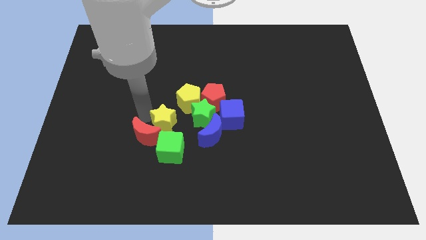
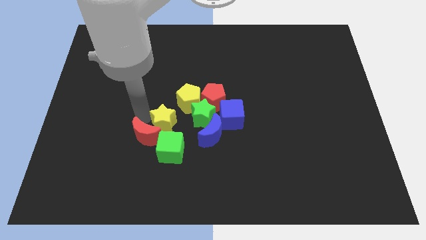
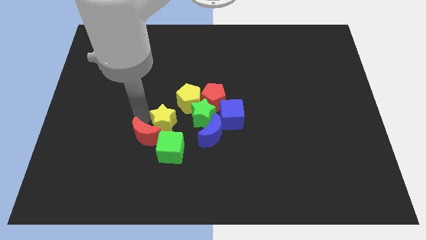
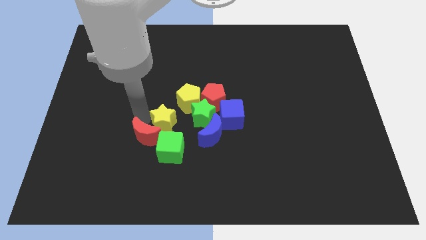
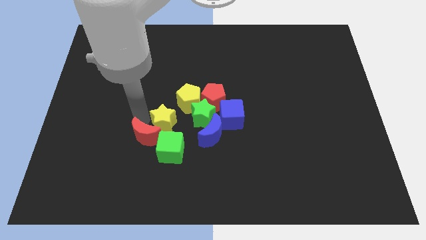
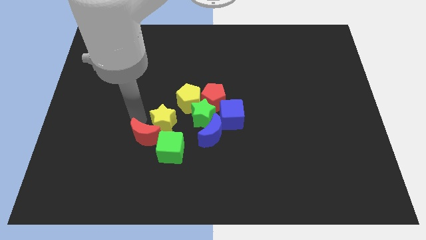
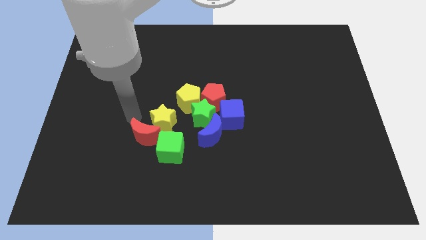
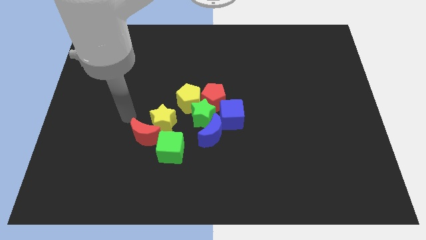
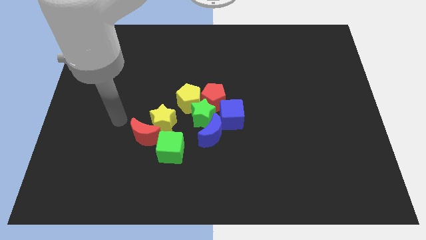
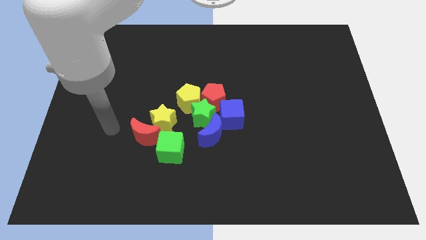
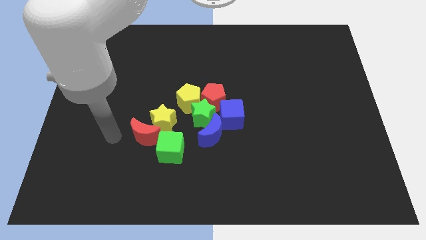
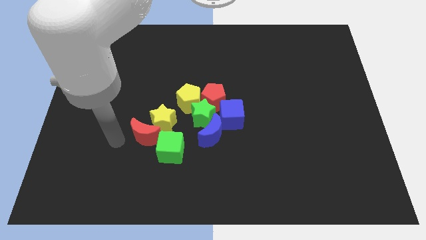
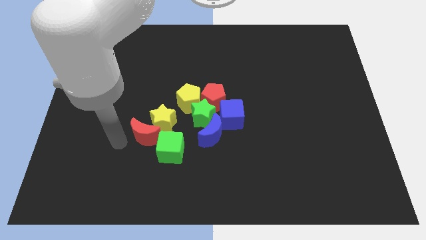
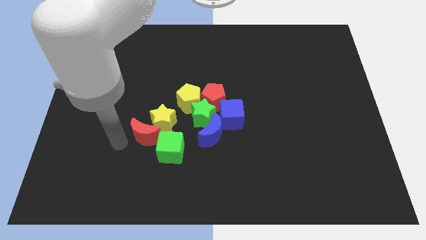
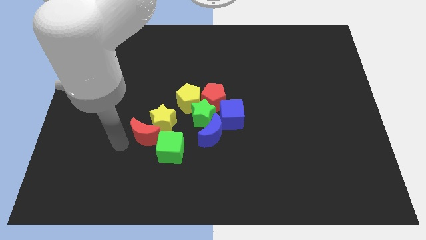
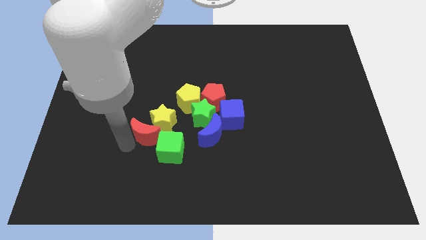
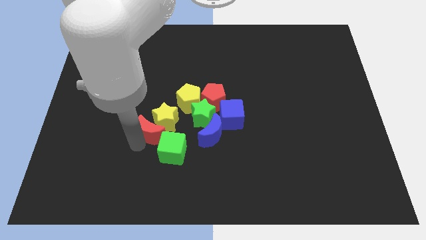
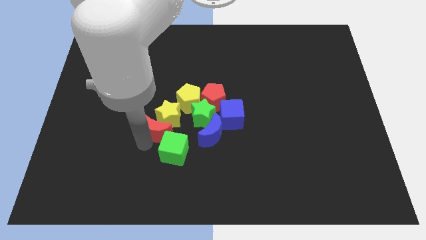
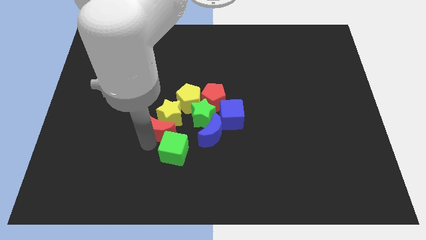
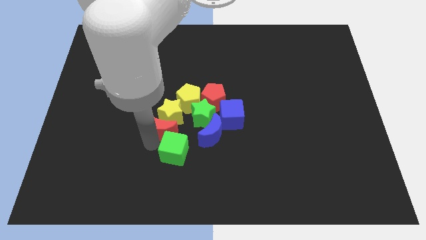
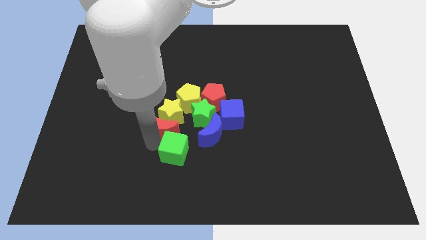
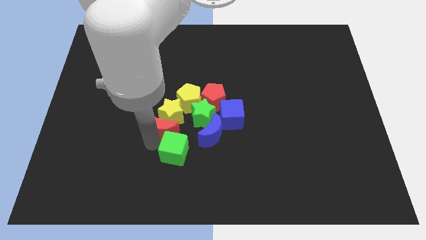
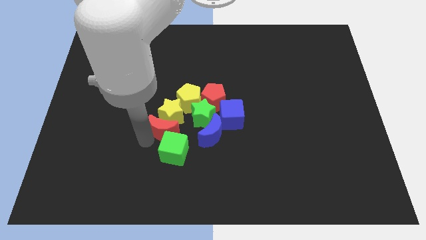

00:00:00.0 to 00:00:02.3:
push the red moon below into the yellow star

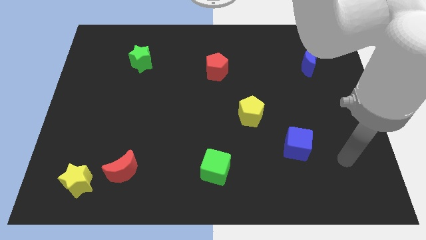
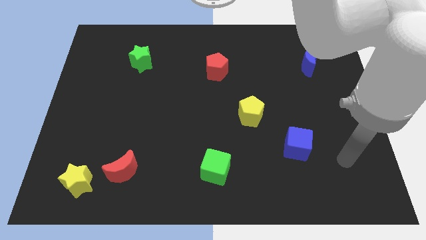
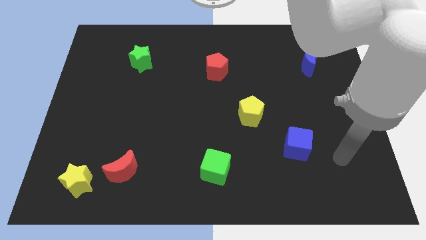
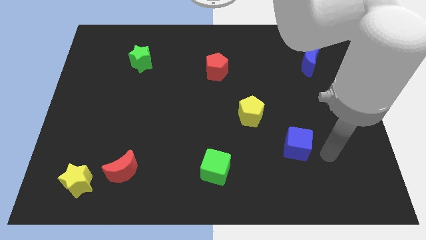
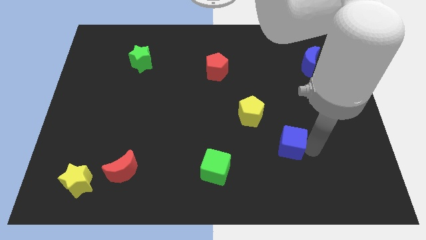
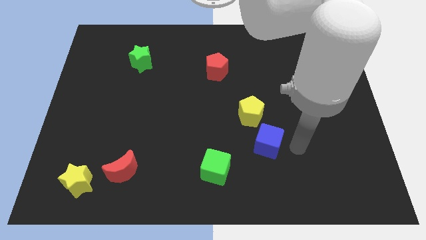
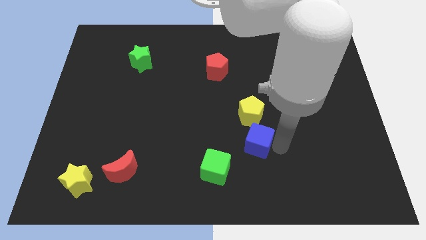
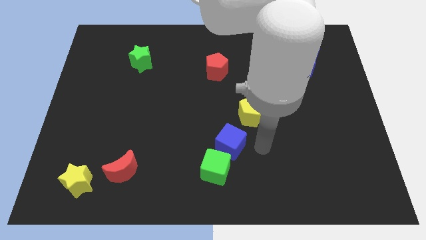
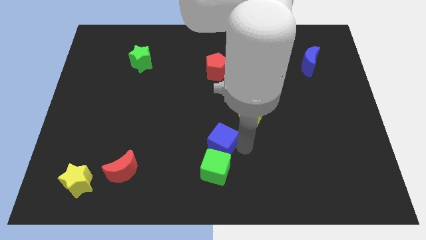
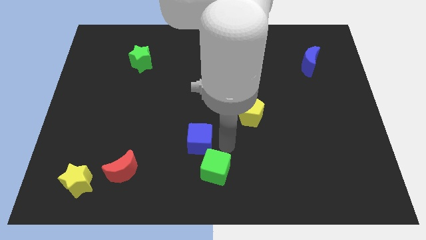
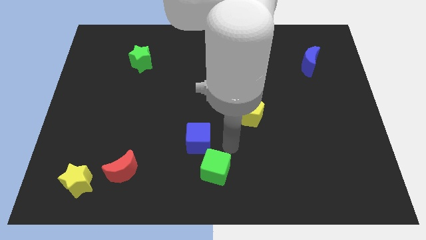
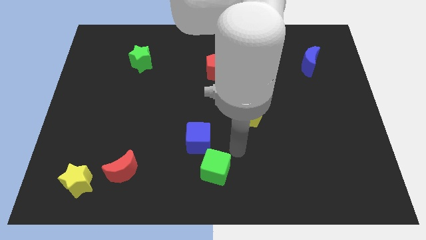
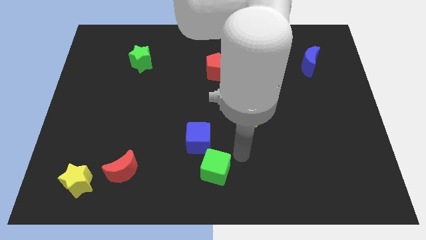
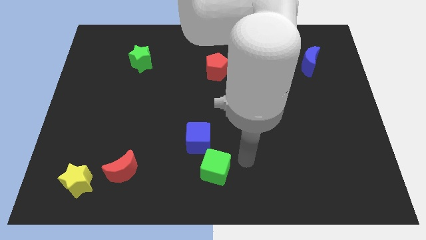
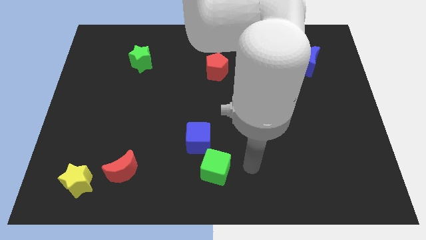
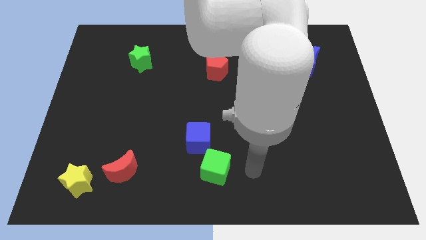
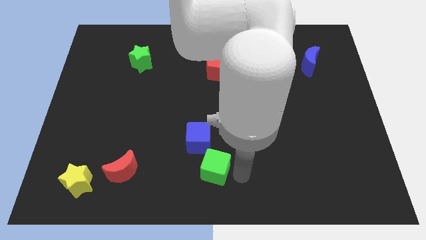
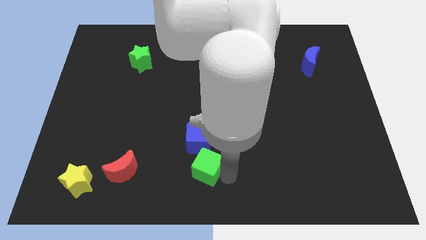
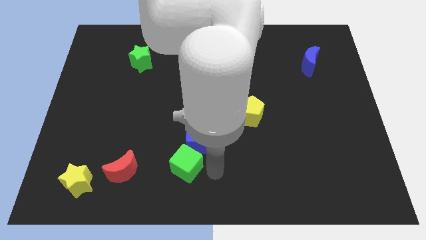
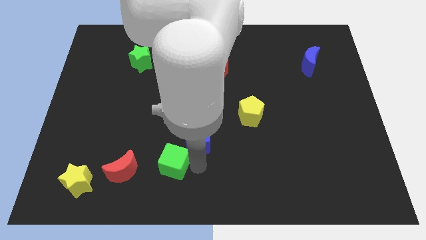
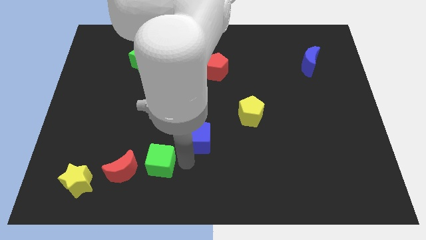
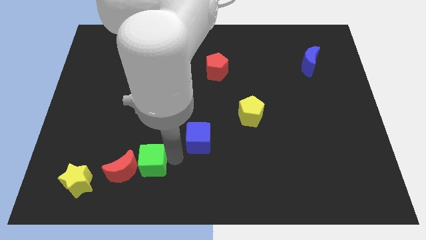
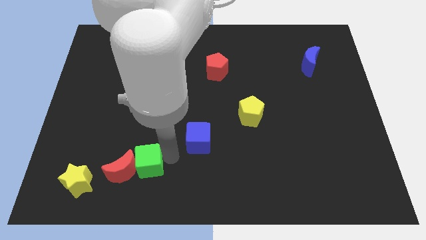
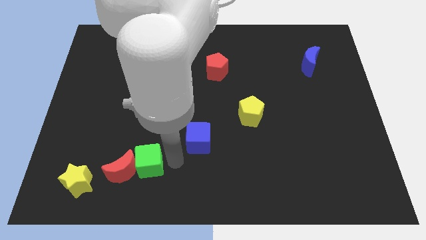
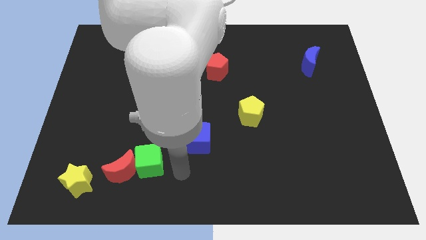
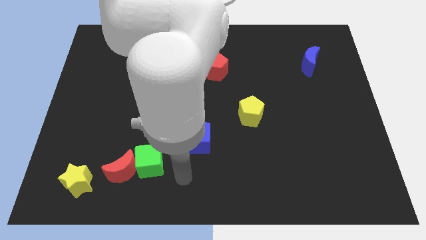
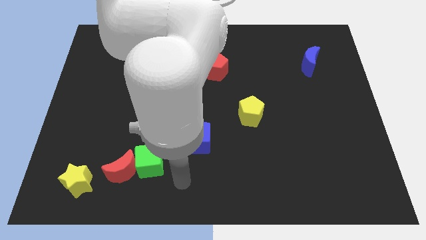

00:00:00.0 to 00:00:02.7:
push the blue and green cube towards left

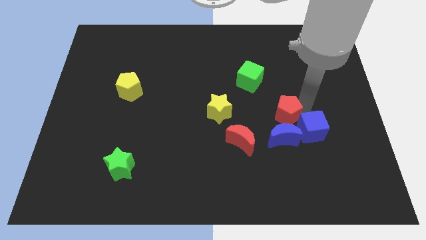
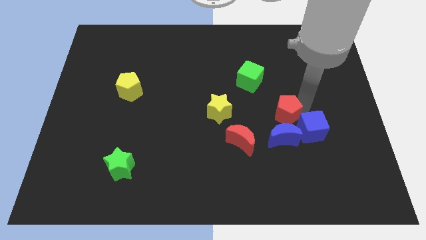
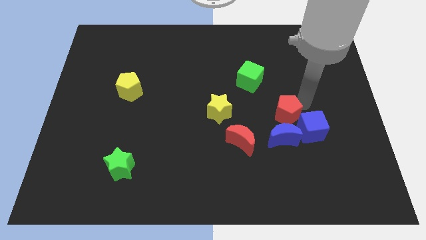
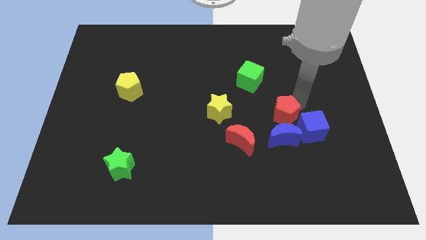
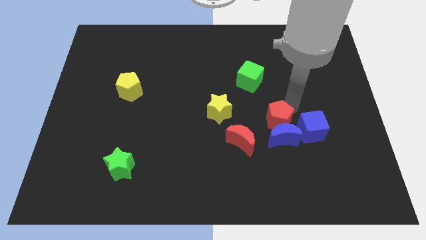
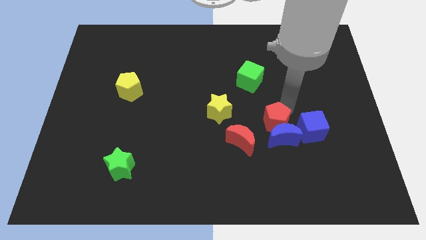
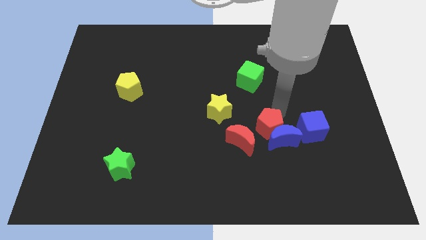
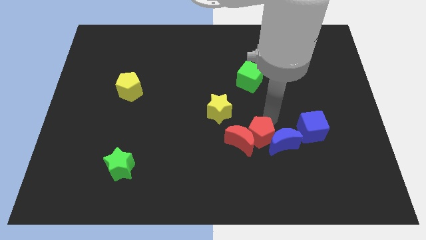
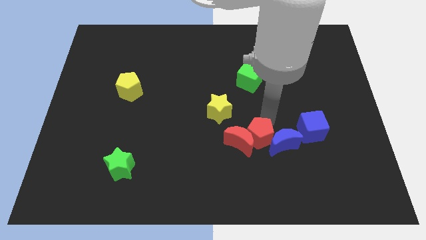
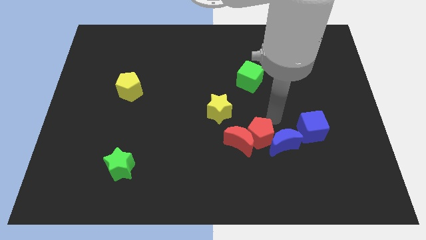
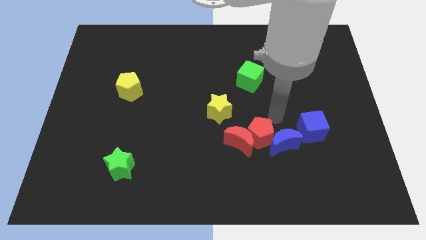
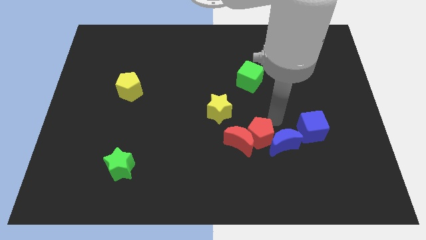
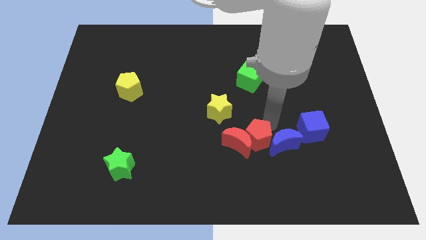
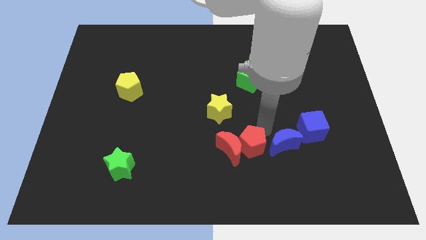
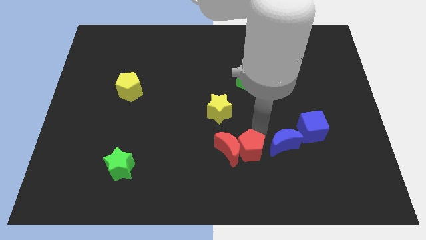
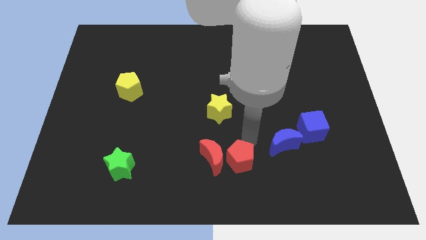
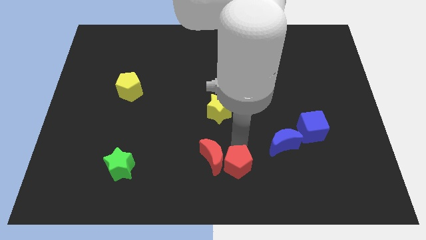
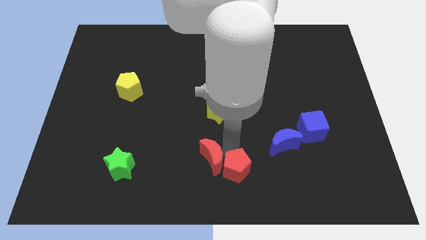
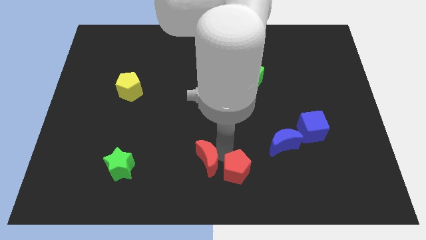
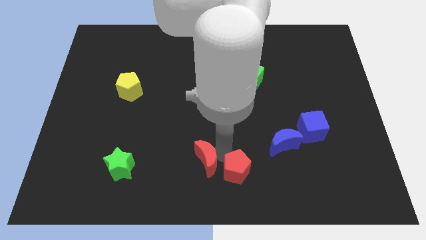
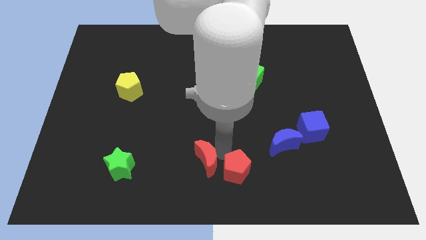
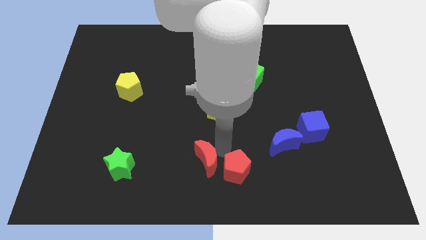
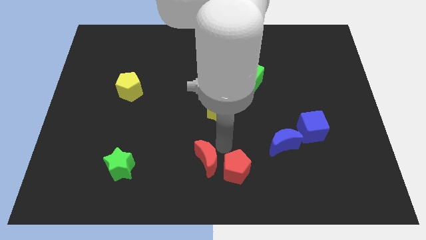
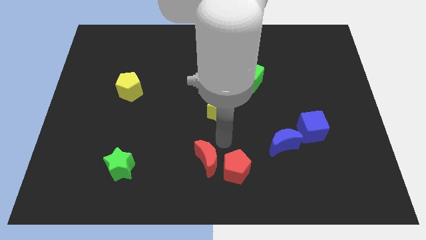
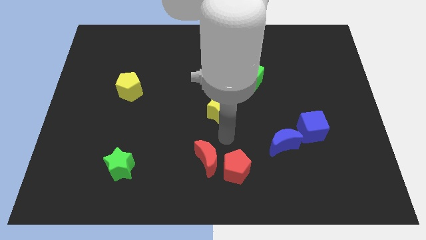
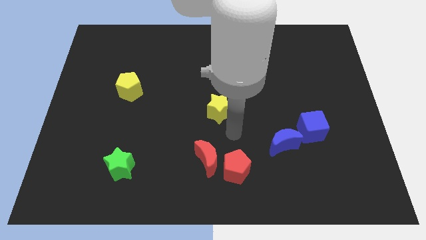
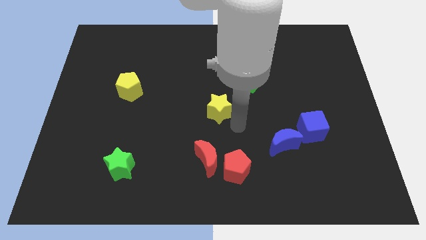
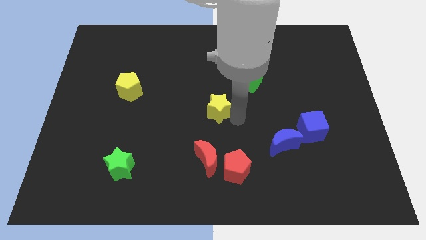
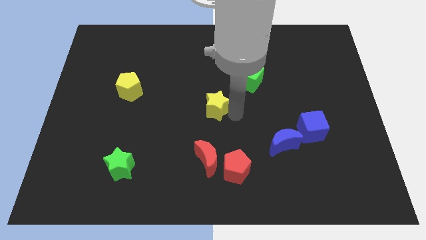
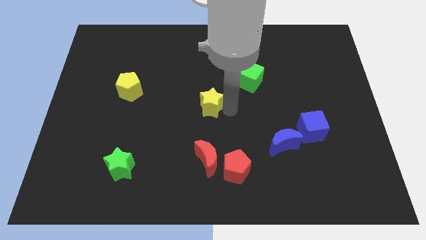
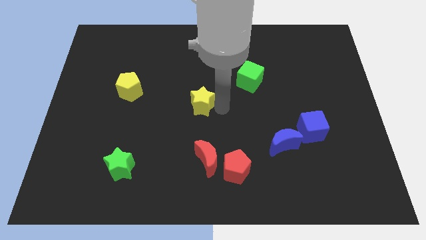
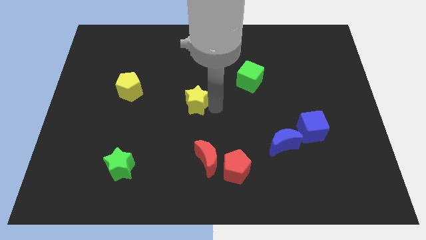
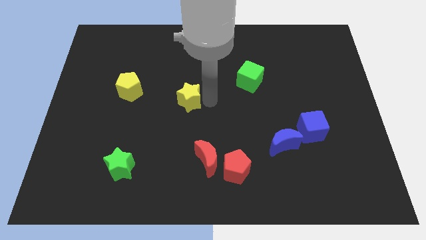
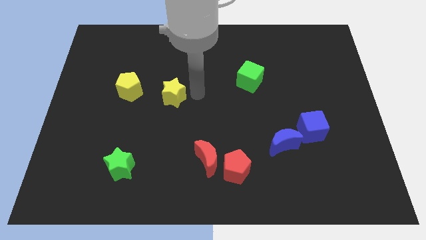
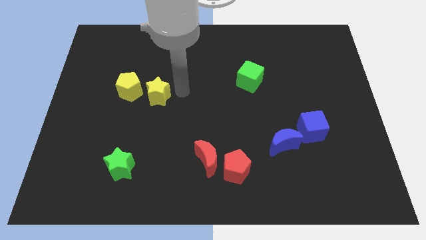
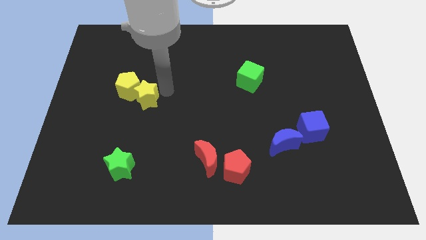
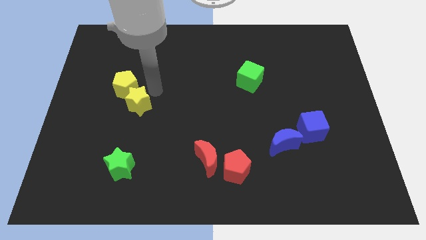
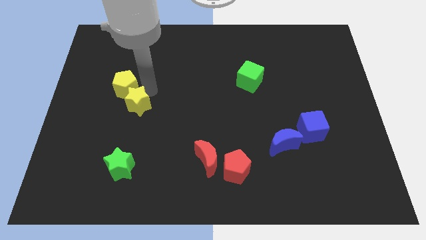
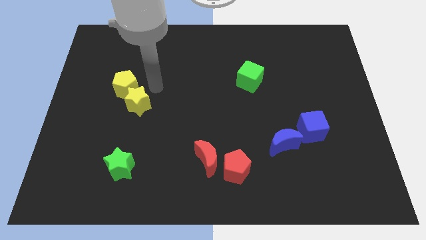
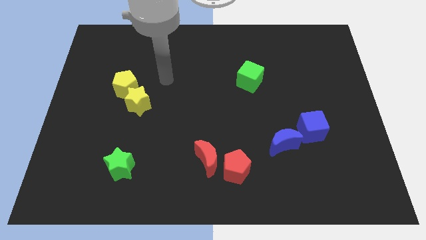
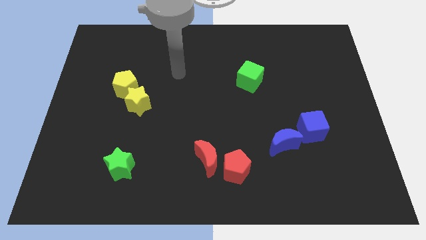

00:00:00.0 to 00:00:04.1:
push the red crescent and red pentagon towards the bottom center of the board
